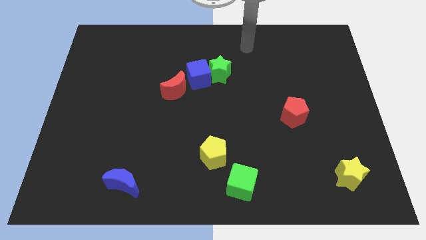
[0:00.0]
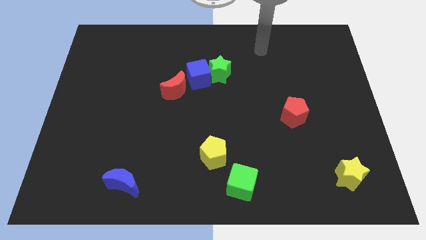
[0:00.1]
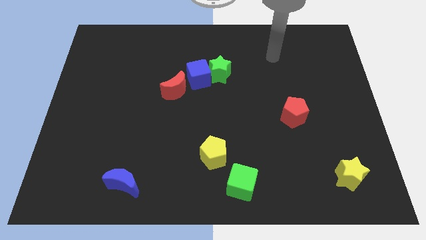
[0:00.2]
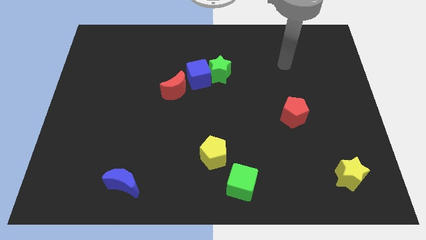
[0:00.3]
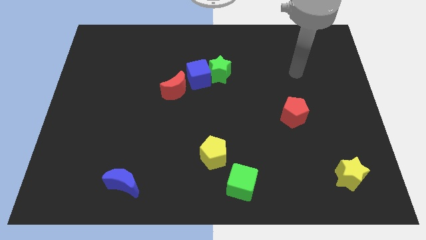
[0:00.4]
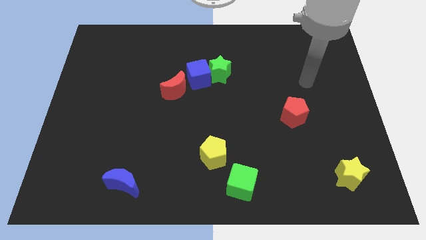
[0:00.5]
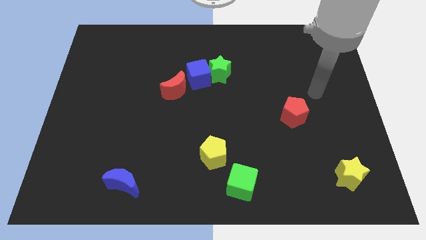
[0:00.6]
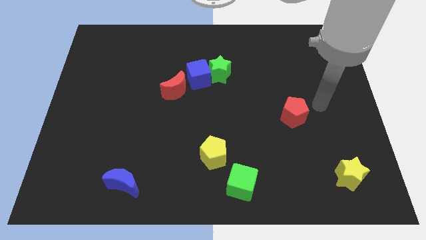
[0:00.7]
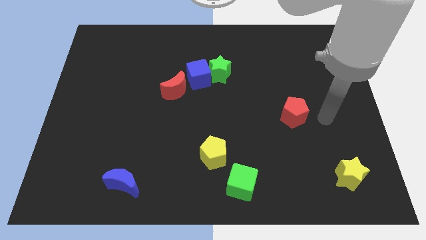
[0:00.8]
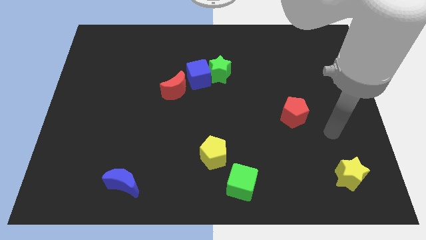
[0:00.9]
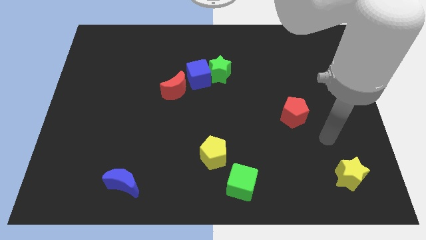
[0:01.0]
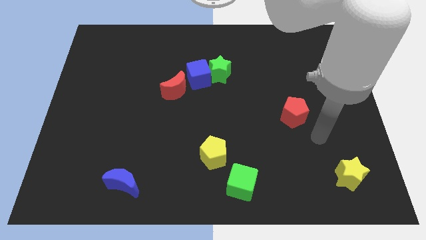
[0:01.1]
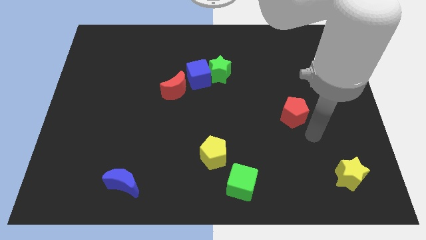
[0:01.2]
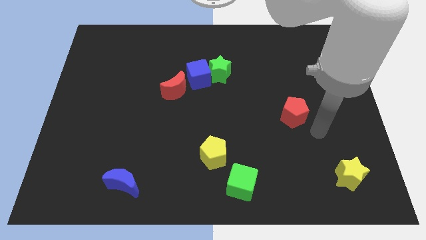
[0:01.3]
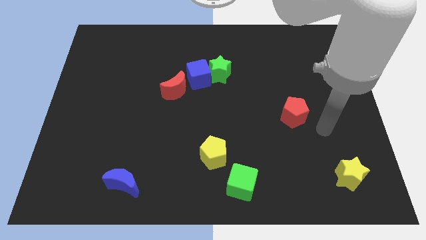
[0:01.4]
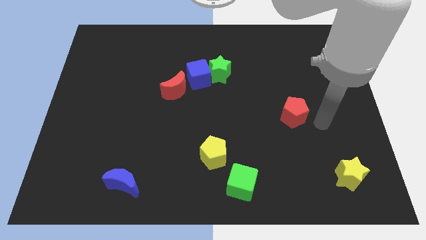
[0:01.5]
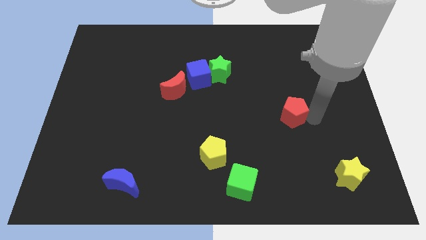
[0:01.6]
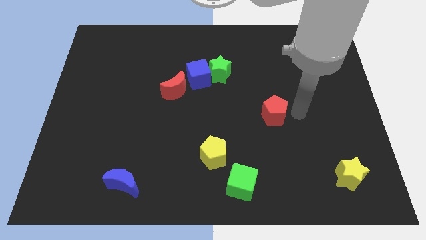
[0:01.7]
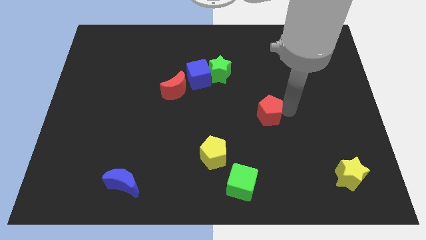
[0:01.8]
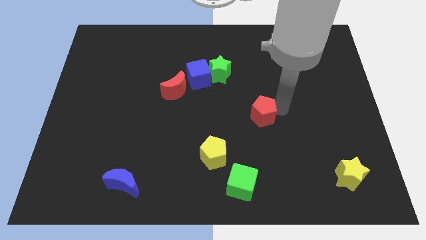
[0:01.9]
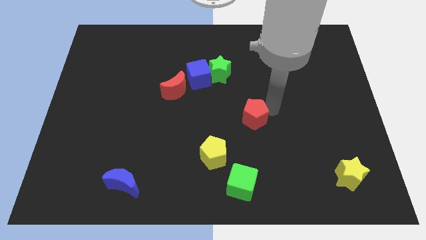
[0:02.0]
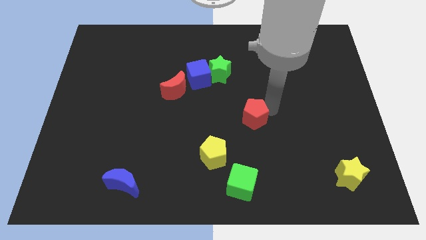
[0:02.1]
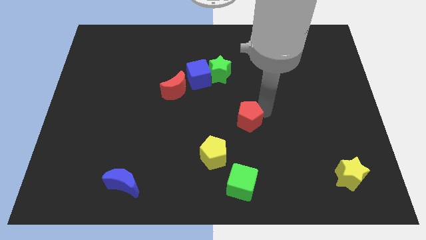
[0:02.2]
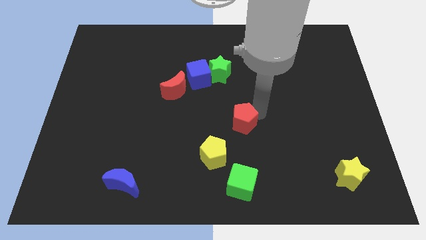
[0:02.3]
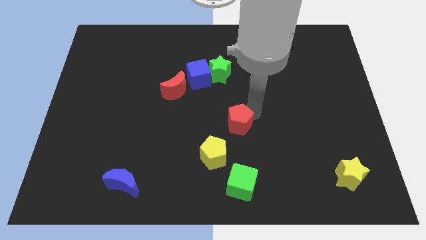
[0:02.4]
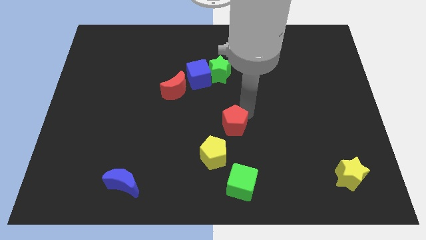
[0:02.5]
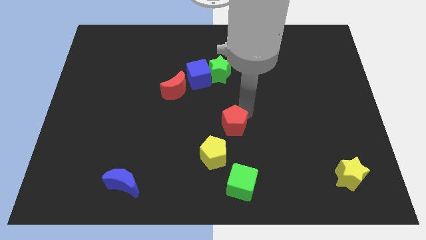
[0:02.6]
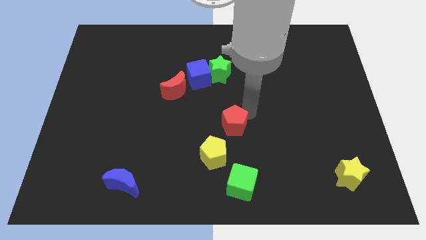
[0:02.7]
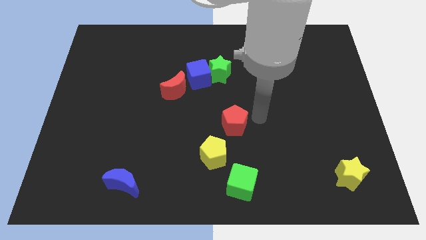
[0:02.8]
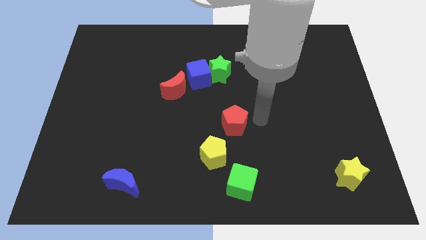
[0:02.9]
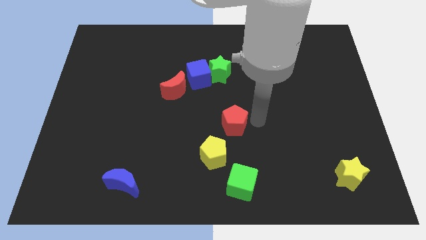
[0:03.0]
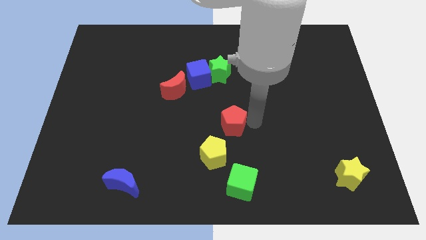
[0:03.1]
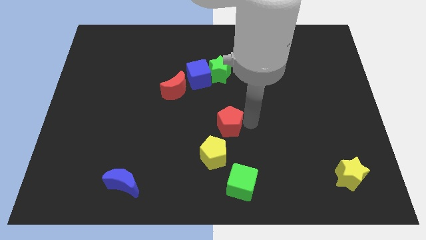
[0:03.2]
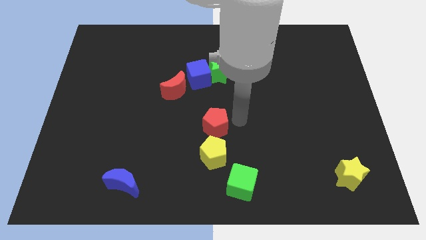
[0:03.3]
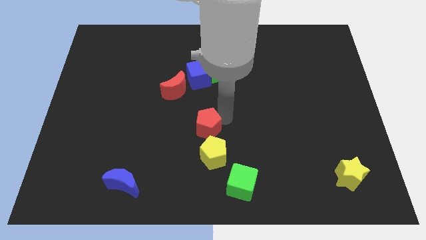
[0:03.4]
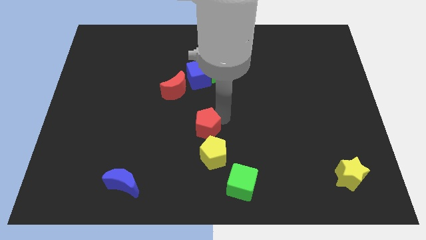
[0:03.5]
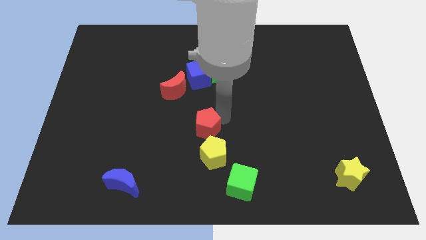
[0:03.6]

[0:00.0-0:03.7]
move the red pentagon to the top of yellow pentagon

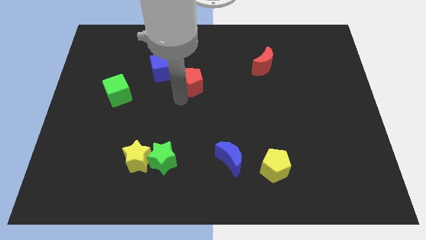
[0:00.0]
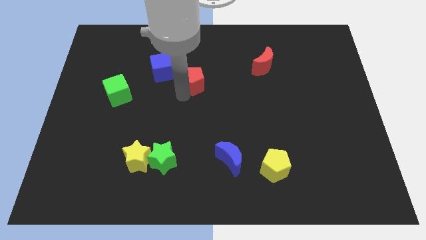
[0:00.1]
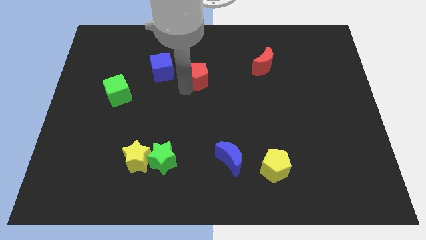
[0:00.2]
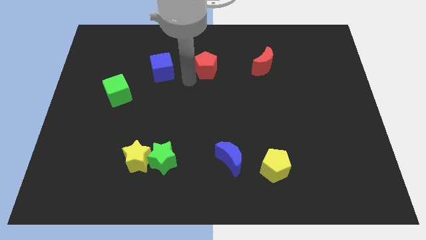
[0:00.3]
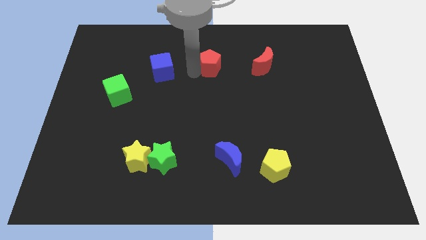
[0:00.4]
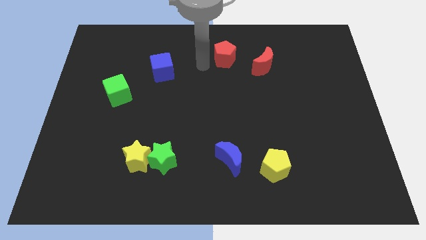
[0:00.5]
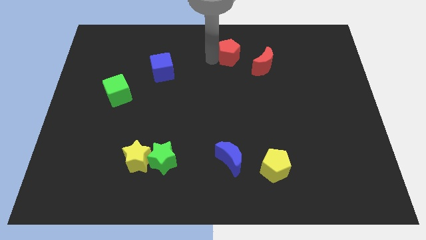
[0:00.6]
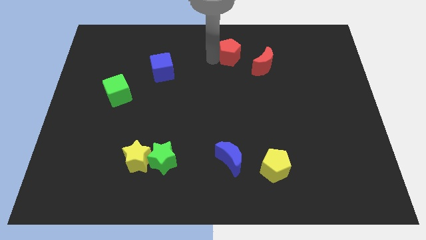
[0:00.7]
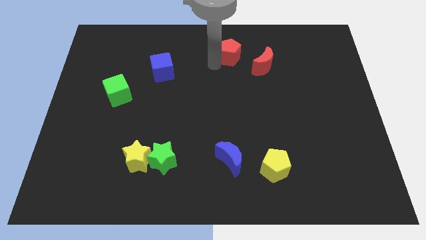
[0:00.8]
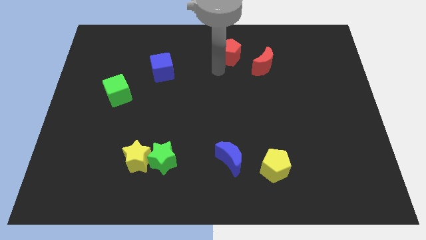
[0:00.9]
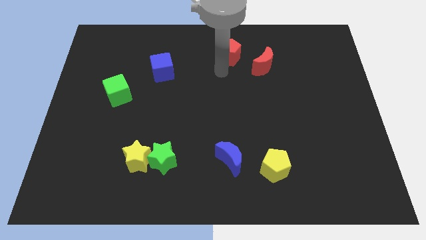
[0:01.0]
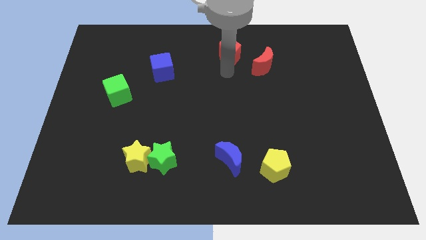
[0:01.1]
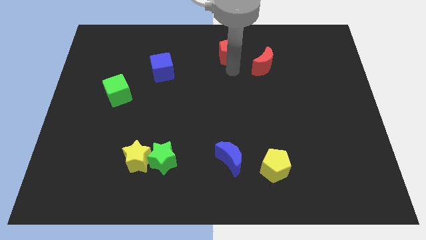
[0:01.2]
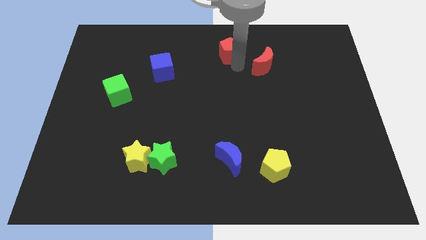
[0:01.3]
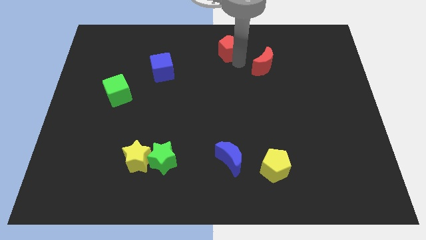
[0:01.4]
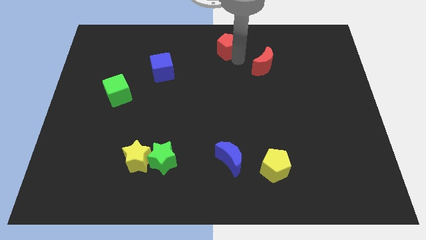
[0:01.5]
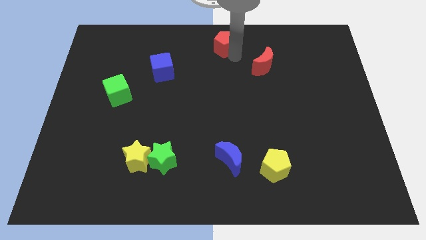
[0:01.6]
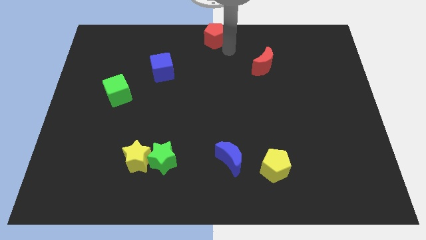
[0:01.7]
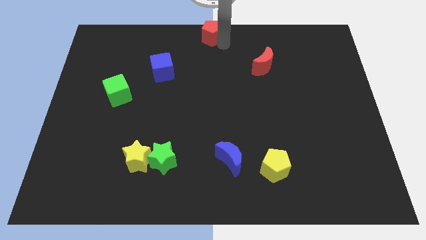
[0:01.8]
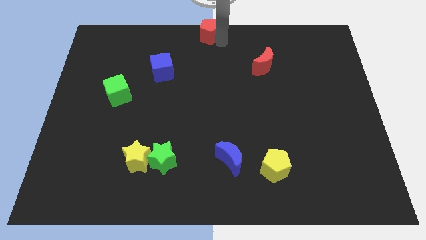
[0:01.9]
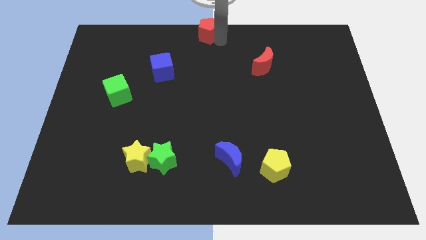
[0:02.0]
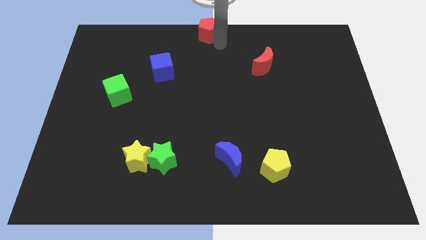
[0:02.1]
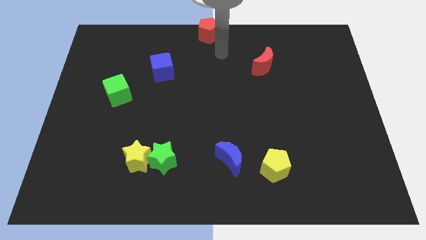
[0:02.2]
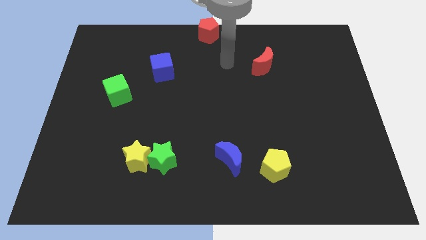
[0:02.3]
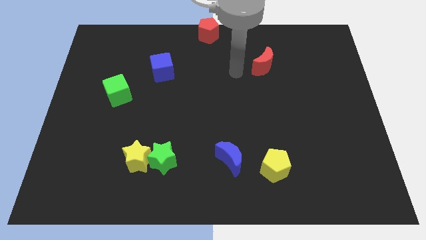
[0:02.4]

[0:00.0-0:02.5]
separate red pentagon from blue cube

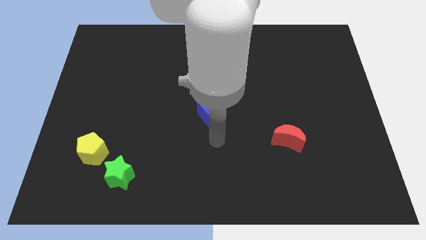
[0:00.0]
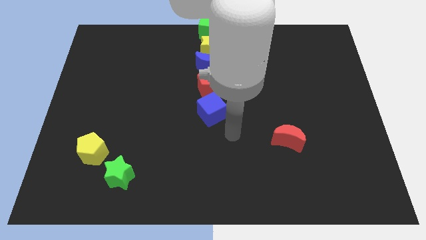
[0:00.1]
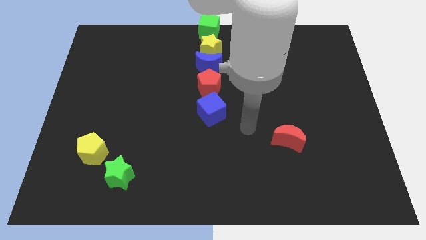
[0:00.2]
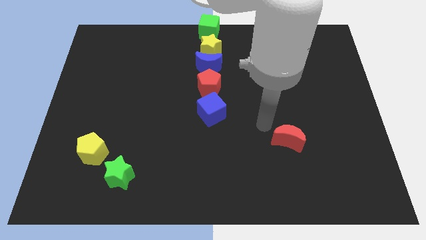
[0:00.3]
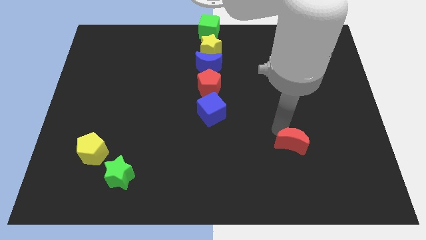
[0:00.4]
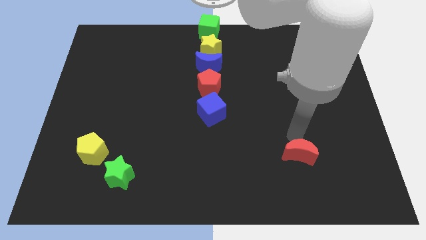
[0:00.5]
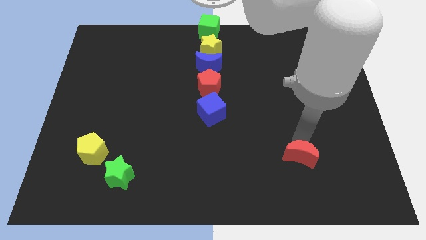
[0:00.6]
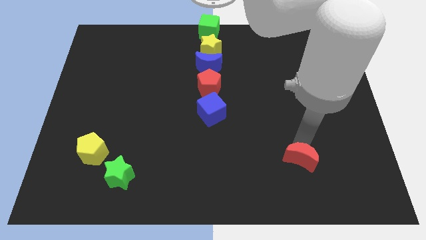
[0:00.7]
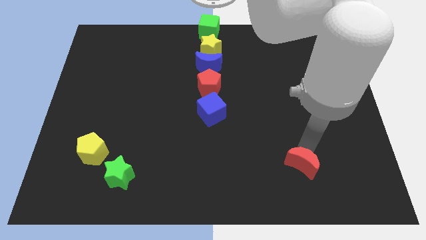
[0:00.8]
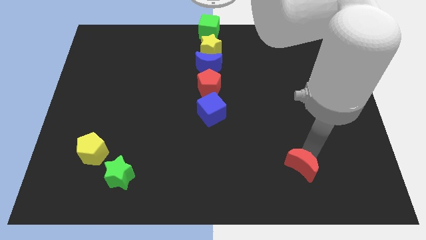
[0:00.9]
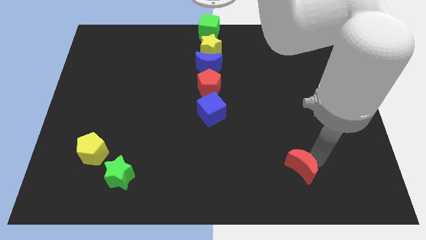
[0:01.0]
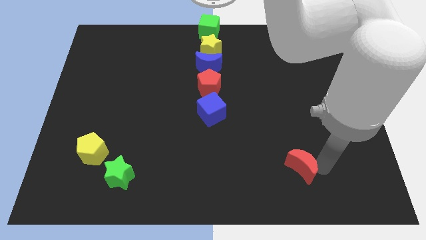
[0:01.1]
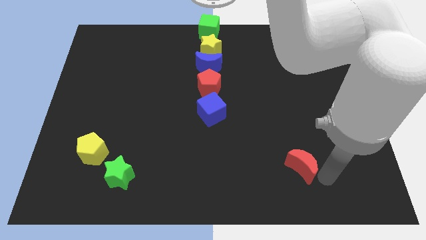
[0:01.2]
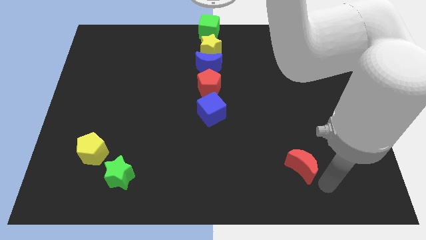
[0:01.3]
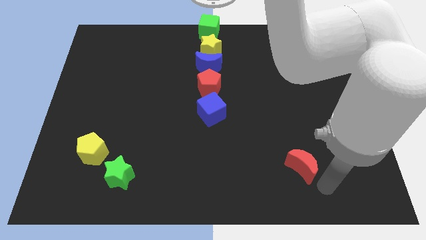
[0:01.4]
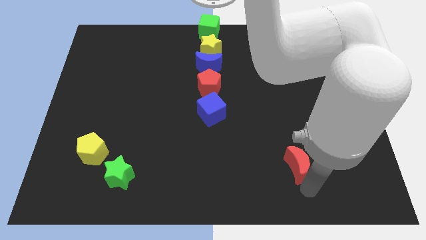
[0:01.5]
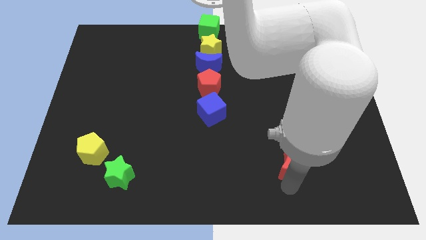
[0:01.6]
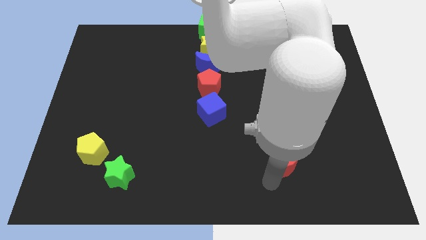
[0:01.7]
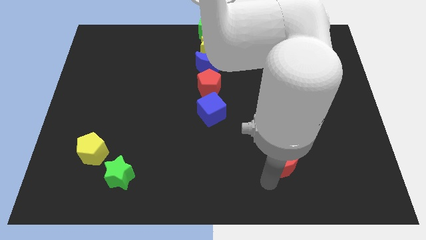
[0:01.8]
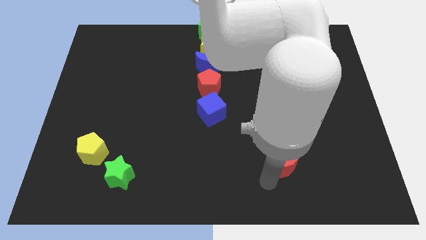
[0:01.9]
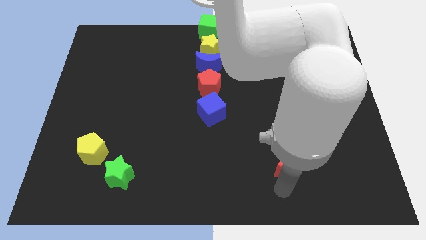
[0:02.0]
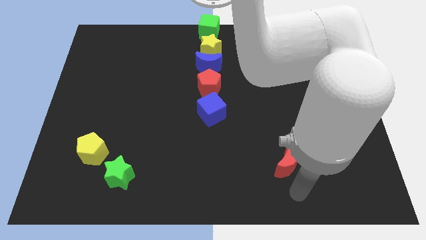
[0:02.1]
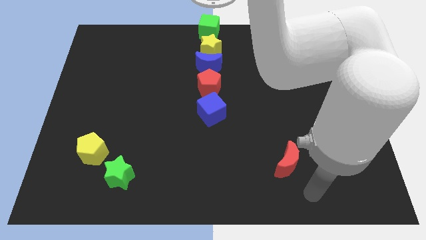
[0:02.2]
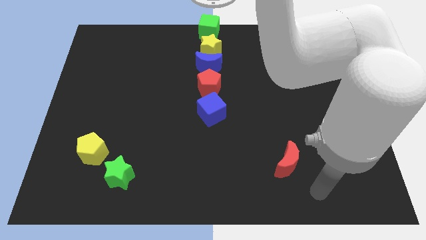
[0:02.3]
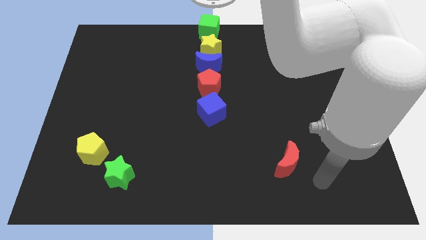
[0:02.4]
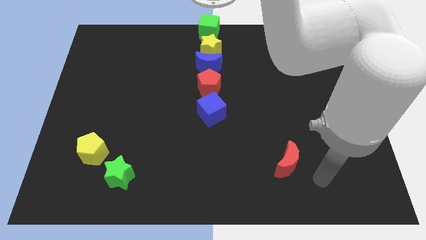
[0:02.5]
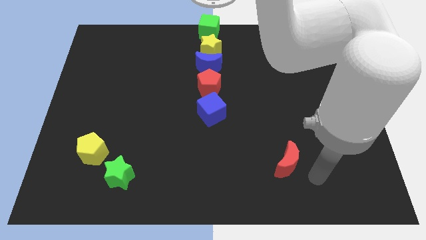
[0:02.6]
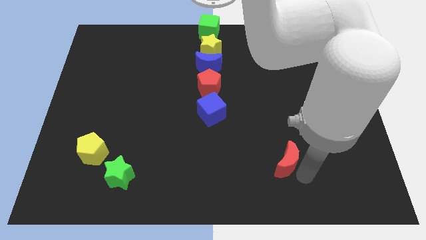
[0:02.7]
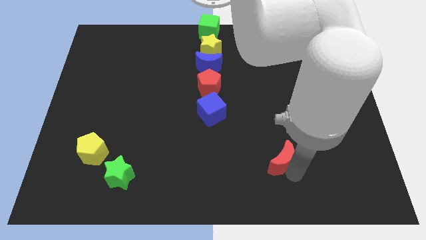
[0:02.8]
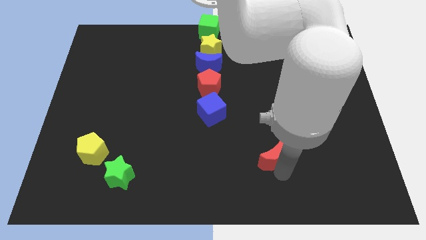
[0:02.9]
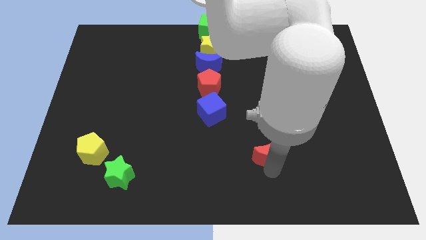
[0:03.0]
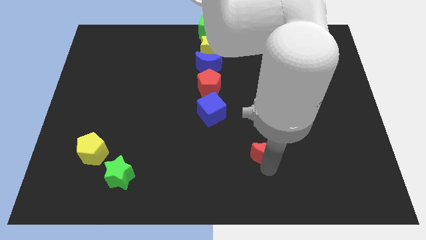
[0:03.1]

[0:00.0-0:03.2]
move the red moon towards the center of the board
